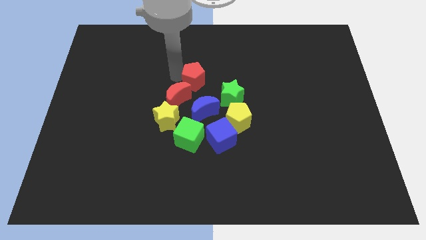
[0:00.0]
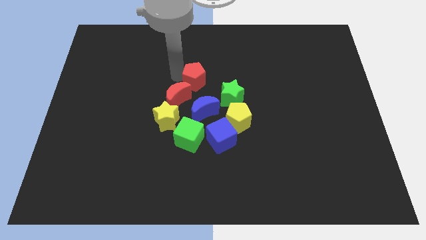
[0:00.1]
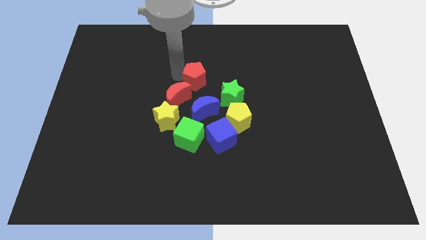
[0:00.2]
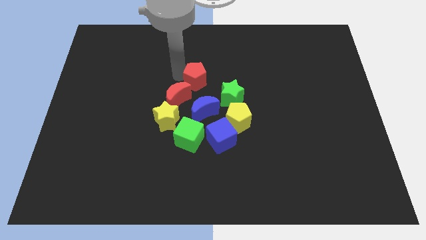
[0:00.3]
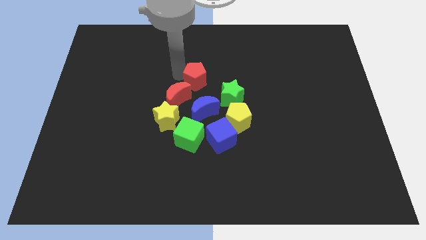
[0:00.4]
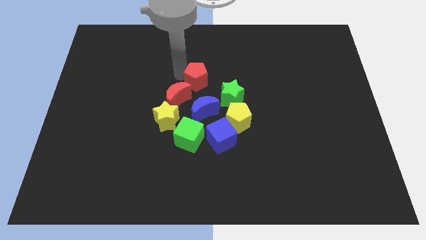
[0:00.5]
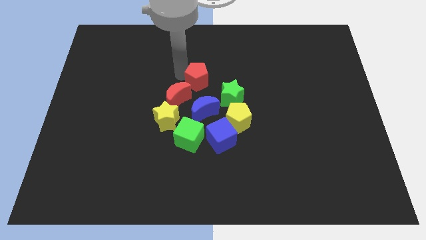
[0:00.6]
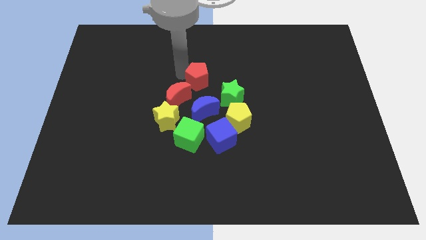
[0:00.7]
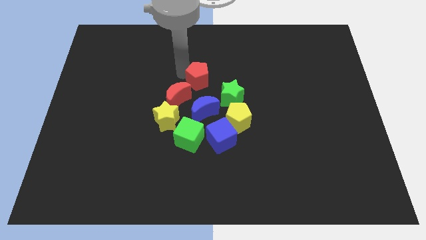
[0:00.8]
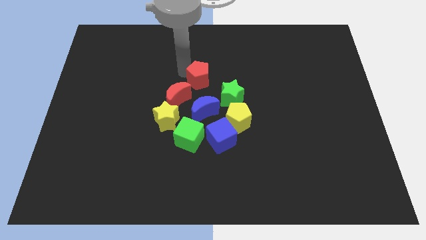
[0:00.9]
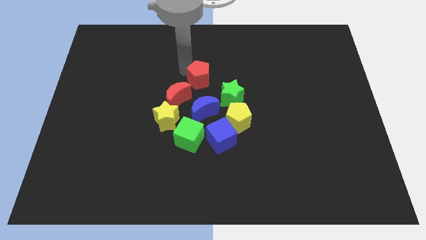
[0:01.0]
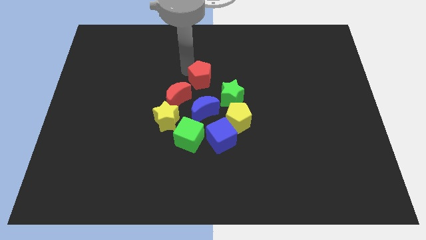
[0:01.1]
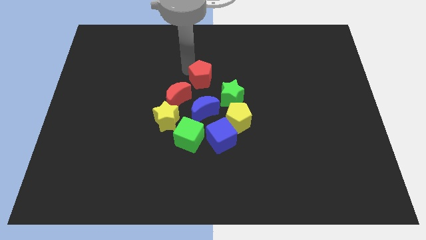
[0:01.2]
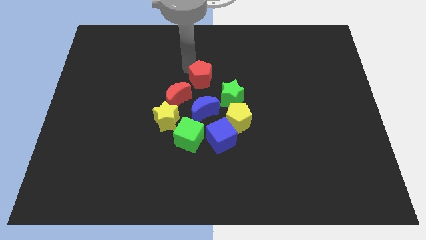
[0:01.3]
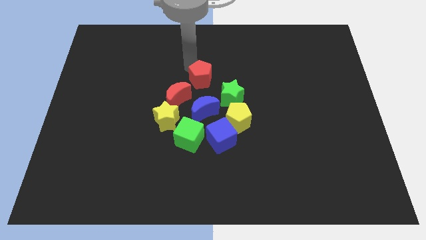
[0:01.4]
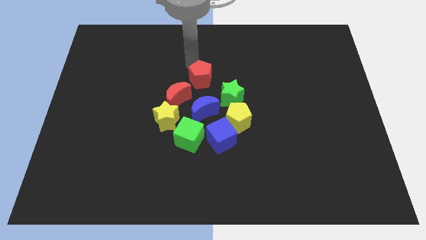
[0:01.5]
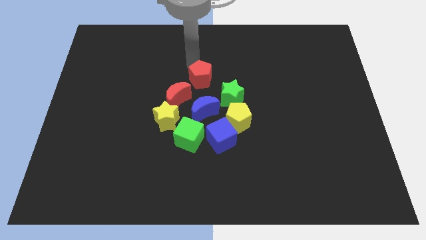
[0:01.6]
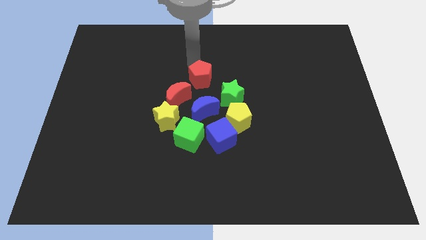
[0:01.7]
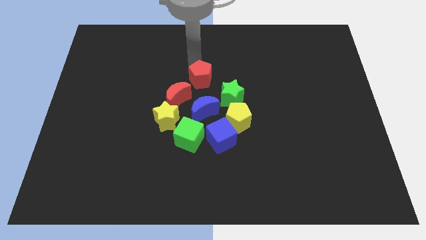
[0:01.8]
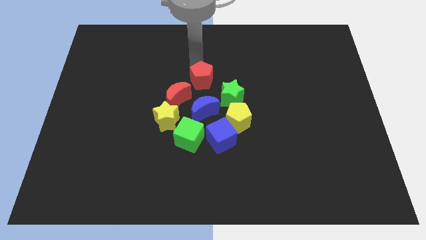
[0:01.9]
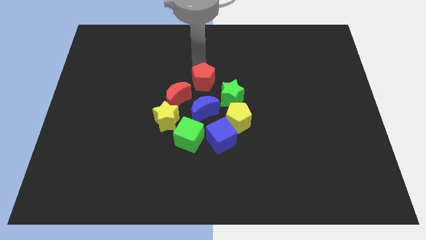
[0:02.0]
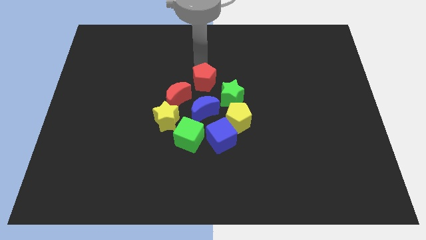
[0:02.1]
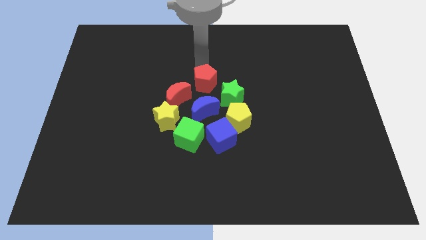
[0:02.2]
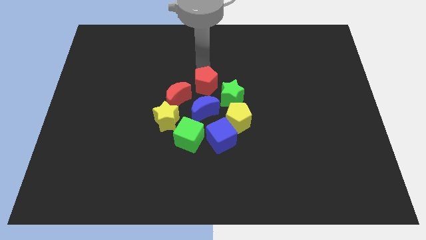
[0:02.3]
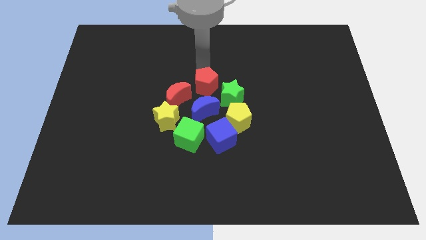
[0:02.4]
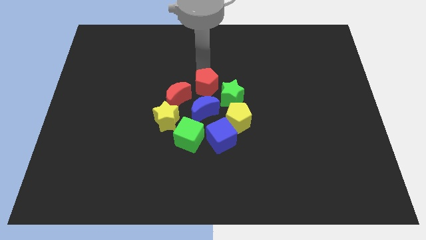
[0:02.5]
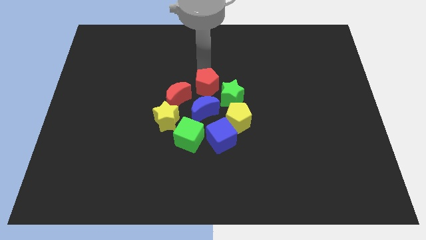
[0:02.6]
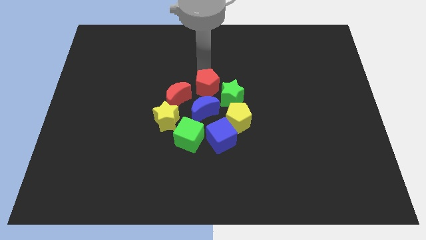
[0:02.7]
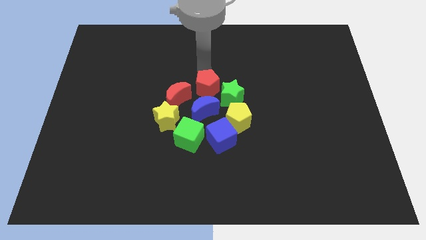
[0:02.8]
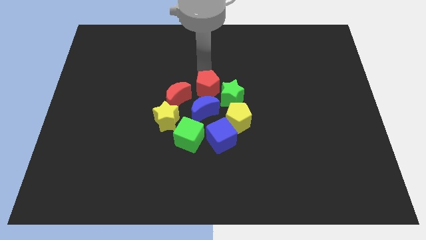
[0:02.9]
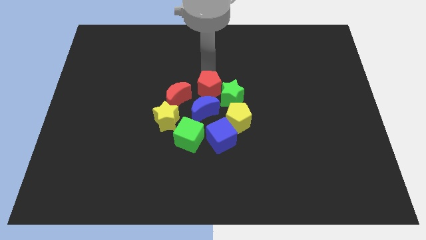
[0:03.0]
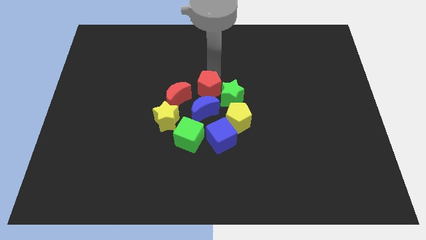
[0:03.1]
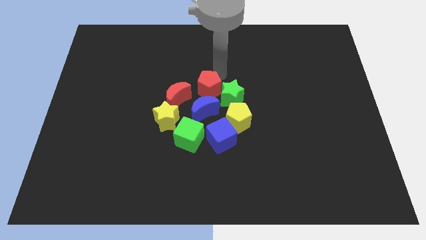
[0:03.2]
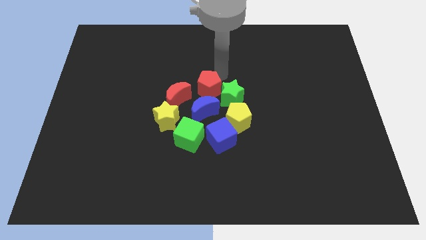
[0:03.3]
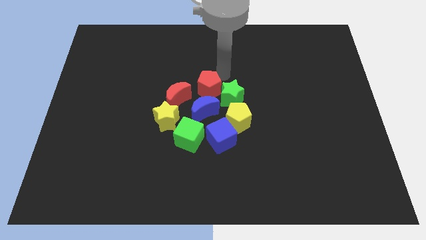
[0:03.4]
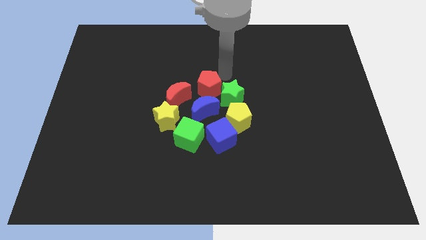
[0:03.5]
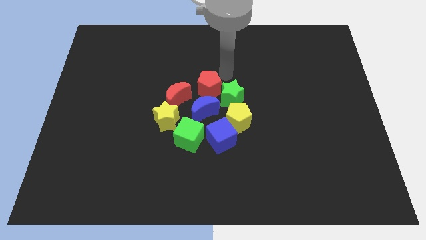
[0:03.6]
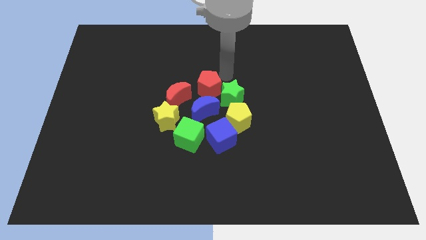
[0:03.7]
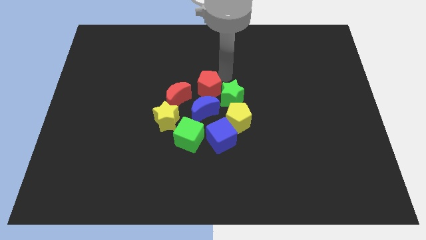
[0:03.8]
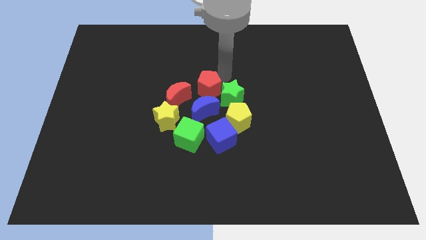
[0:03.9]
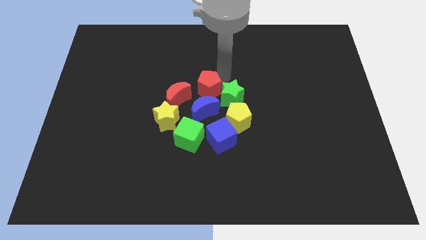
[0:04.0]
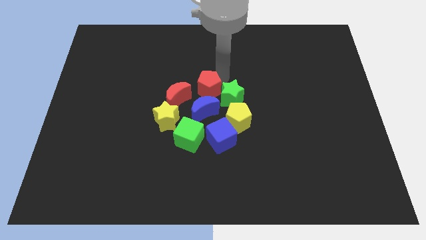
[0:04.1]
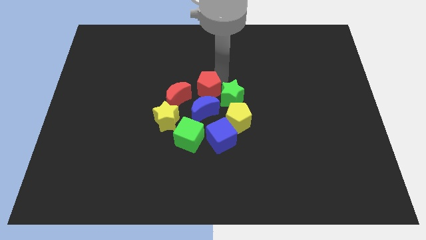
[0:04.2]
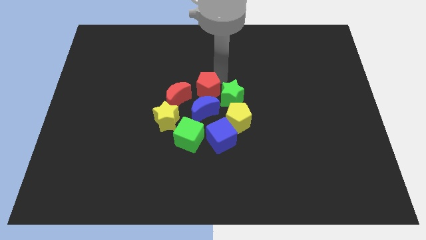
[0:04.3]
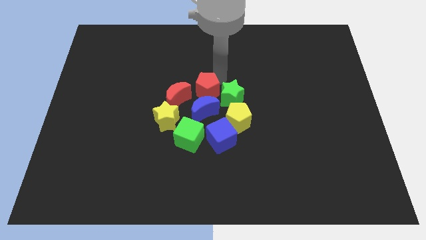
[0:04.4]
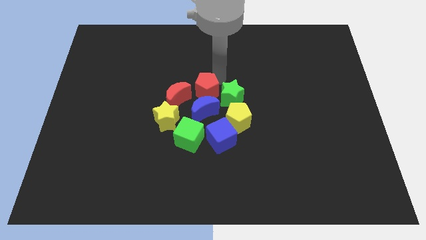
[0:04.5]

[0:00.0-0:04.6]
slide the red pentagon vertically above the blue crescent

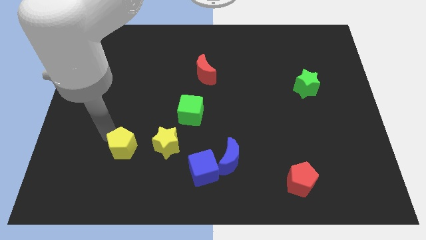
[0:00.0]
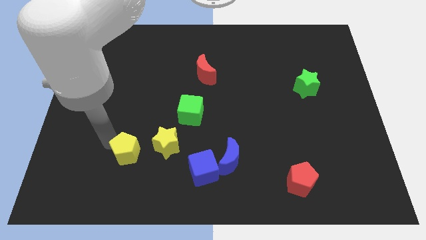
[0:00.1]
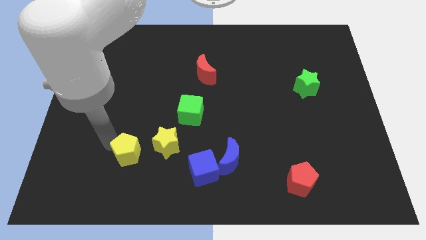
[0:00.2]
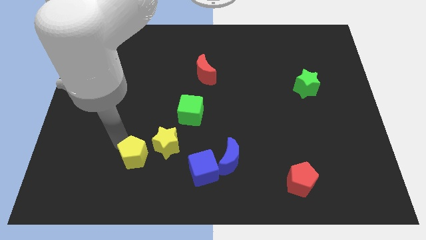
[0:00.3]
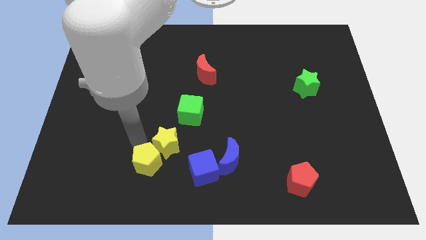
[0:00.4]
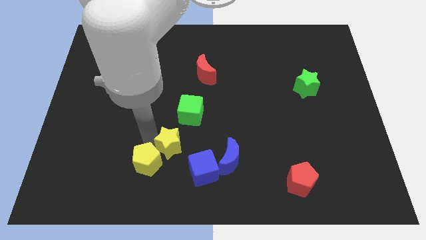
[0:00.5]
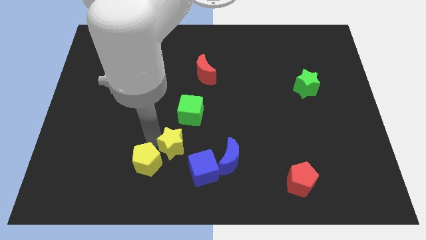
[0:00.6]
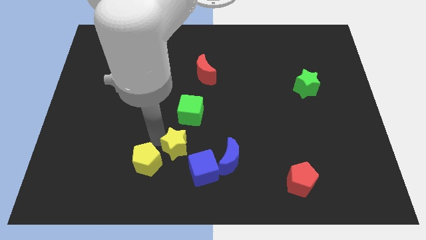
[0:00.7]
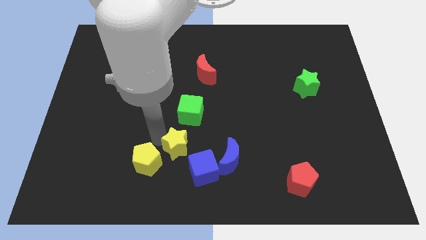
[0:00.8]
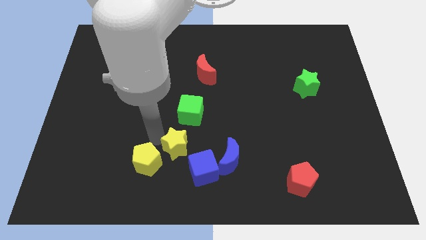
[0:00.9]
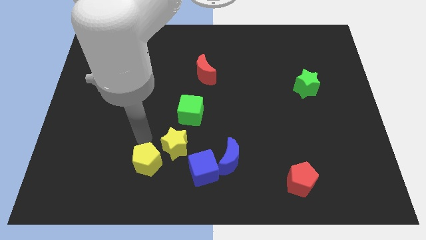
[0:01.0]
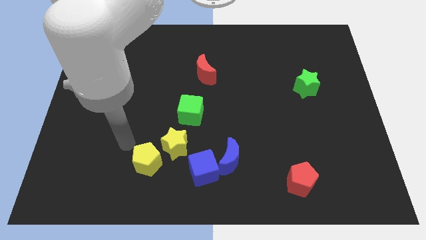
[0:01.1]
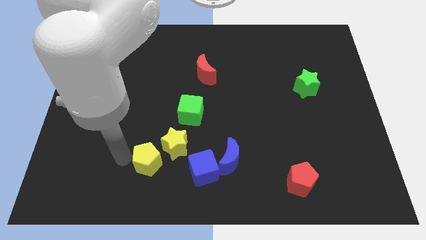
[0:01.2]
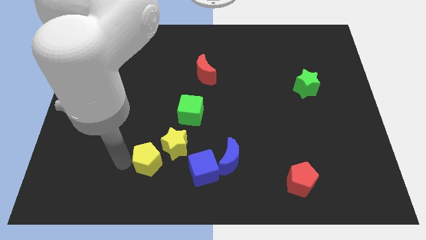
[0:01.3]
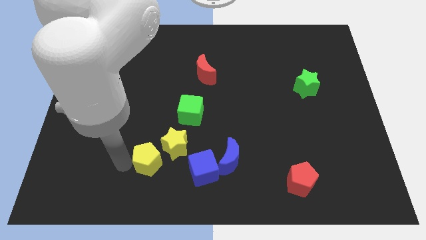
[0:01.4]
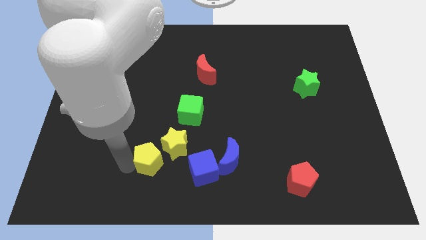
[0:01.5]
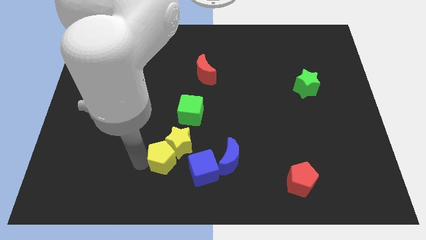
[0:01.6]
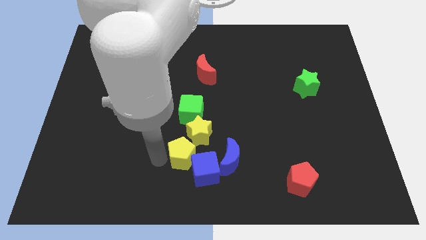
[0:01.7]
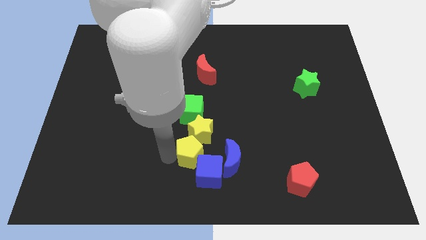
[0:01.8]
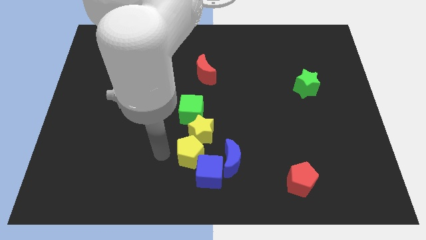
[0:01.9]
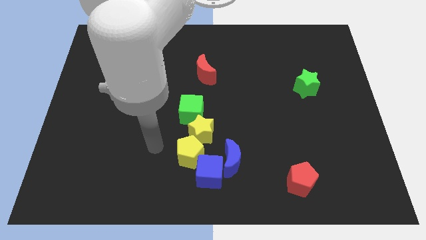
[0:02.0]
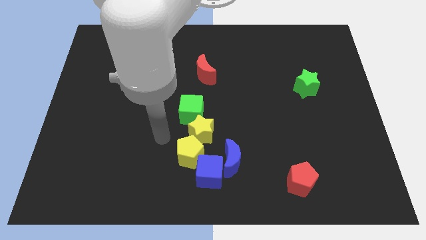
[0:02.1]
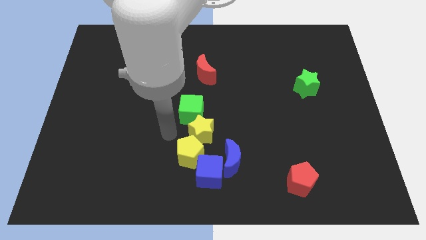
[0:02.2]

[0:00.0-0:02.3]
push the yellow pentagon into the yellow star

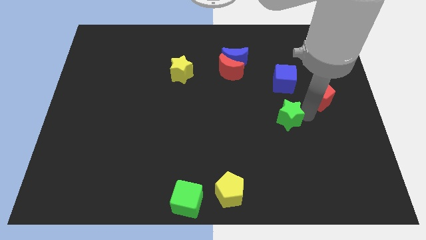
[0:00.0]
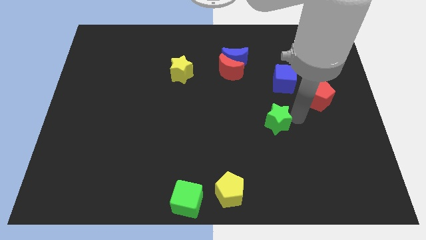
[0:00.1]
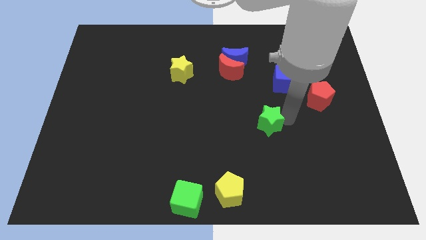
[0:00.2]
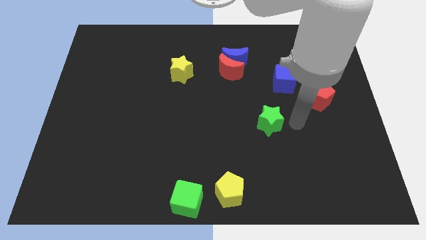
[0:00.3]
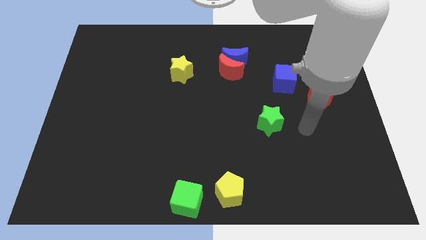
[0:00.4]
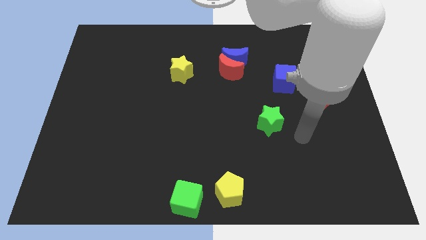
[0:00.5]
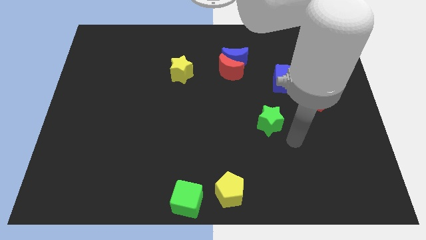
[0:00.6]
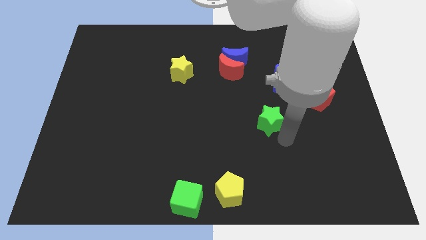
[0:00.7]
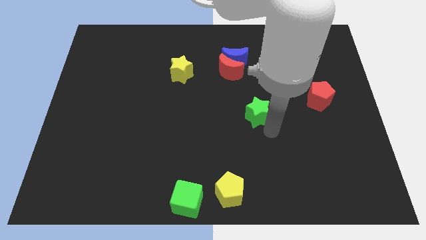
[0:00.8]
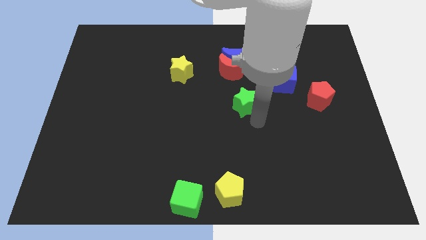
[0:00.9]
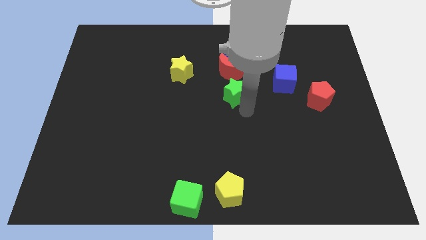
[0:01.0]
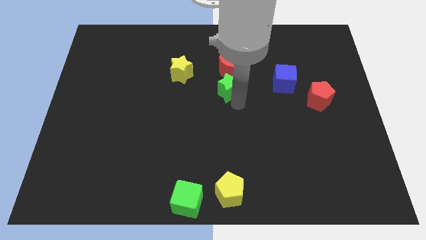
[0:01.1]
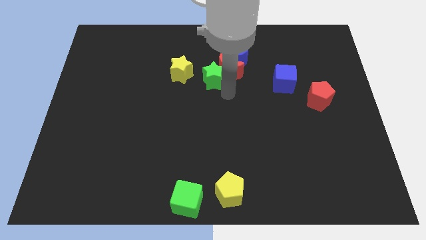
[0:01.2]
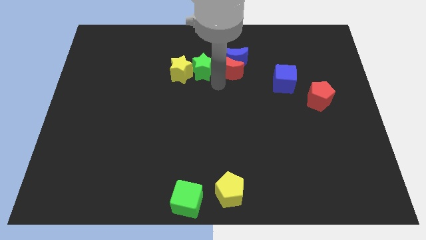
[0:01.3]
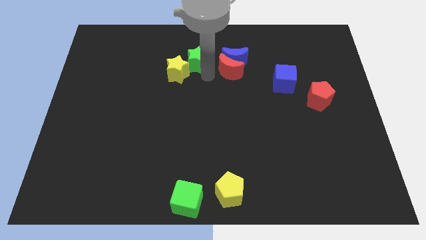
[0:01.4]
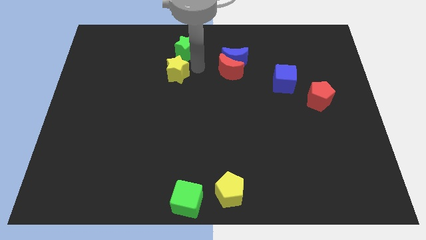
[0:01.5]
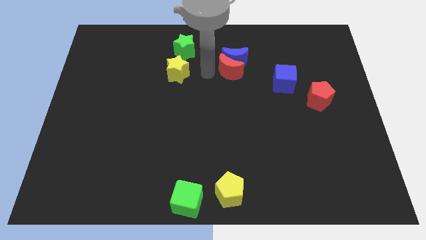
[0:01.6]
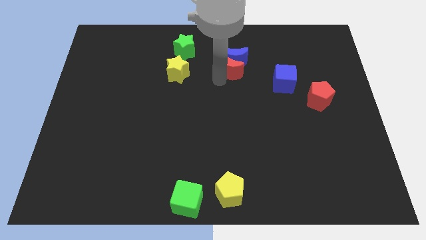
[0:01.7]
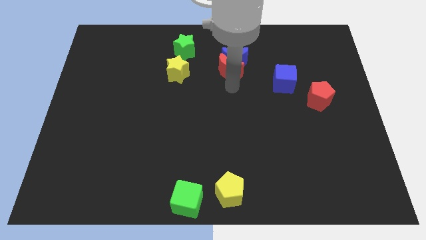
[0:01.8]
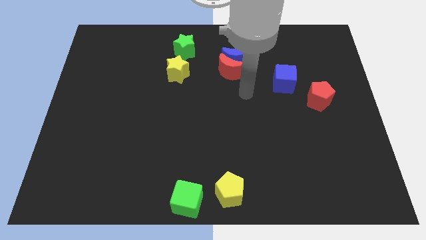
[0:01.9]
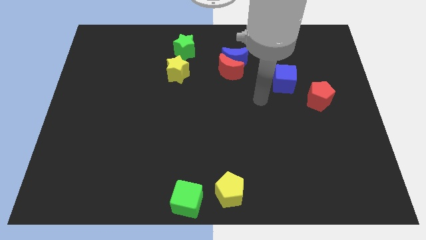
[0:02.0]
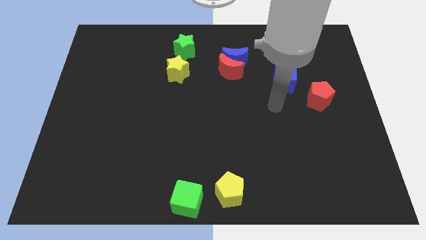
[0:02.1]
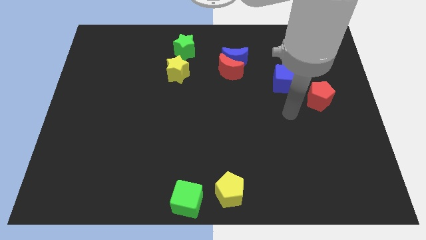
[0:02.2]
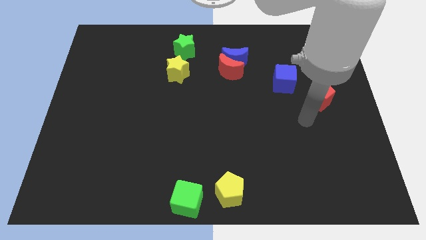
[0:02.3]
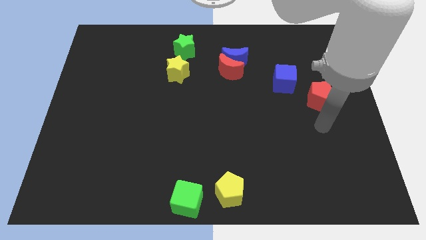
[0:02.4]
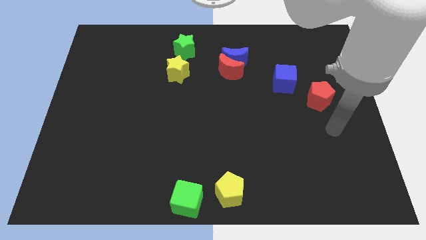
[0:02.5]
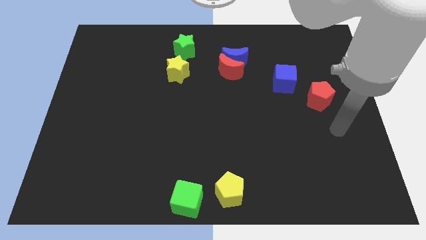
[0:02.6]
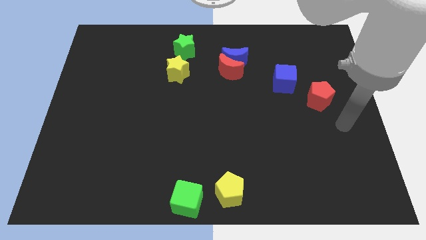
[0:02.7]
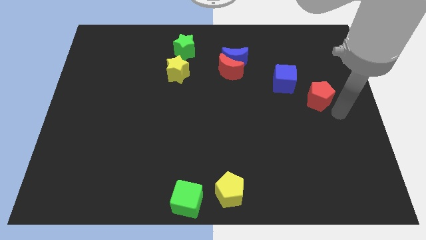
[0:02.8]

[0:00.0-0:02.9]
place the green star above the yellow star
